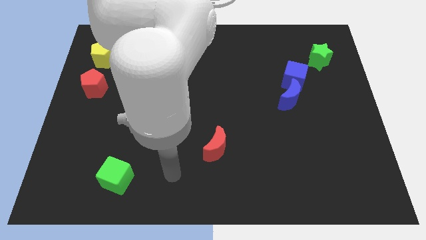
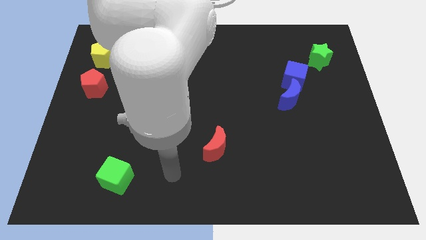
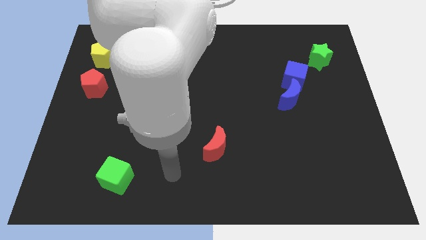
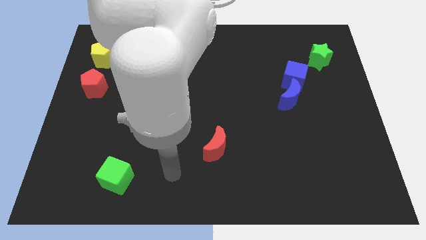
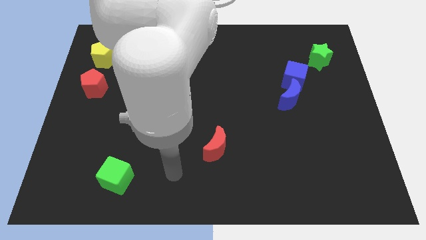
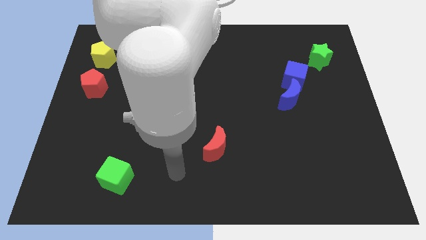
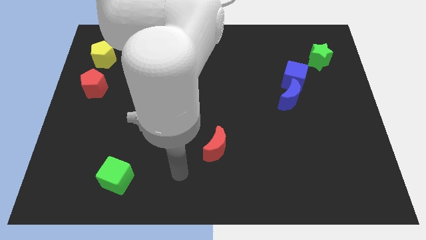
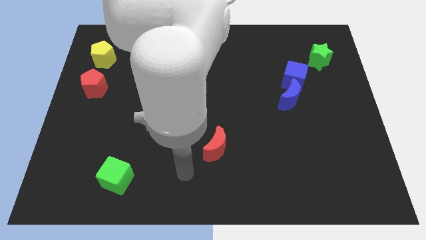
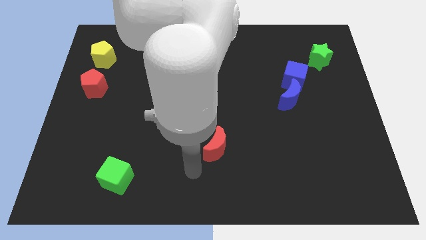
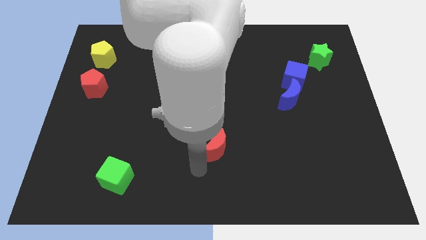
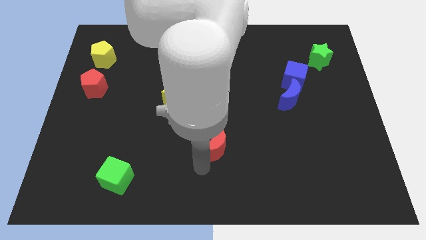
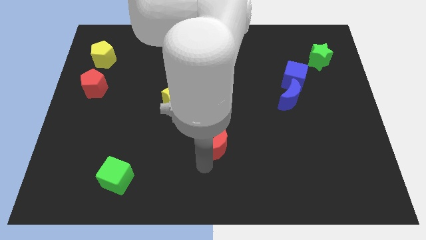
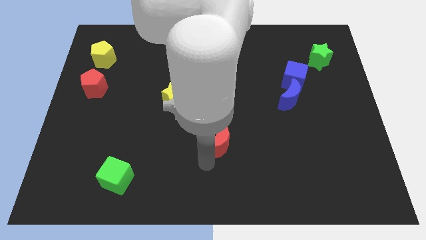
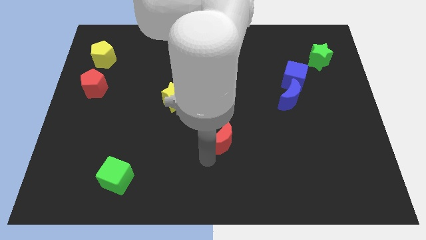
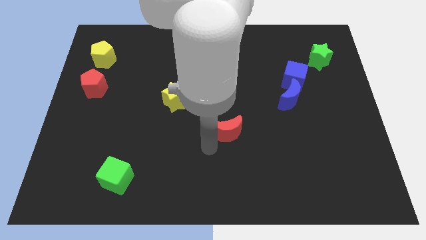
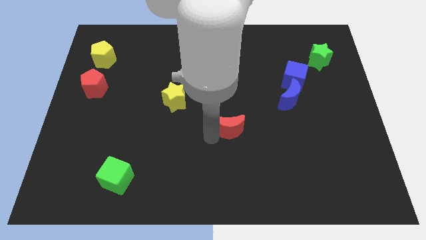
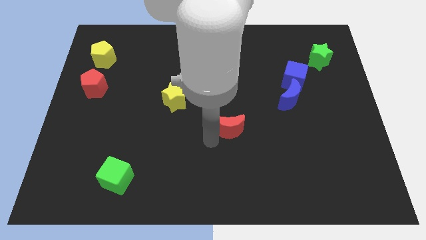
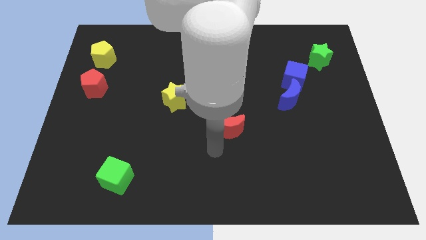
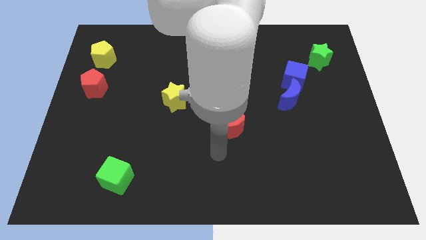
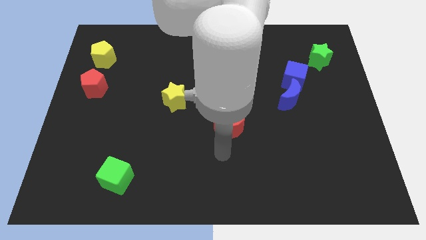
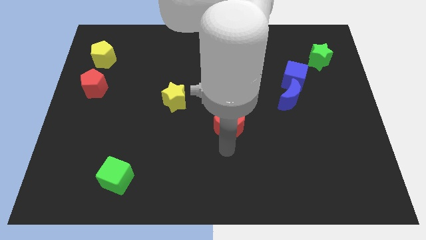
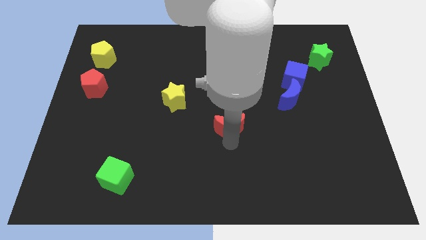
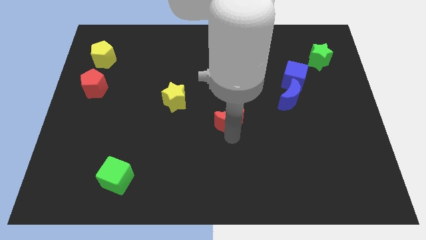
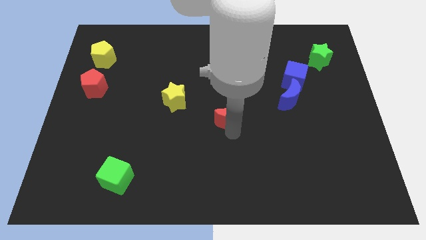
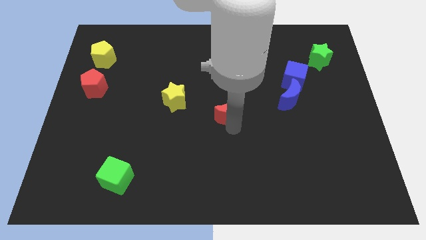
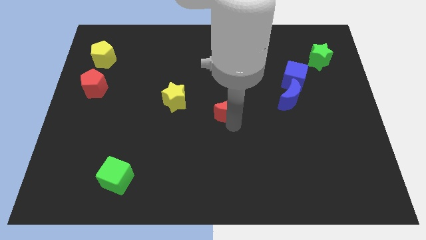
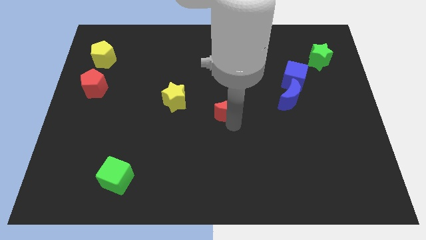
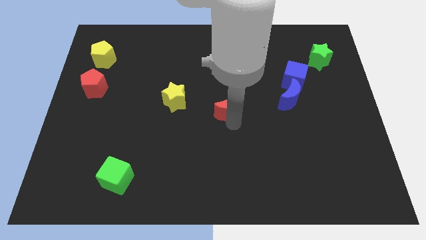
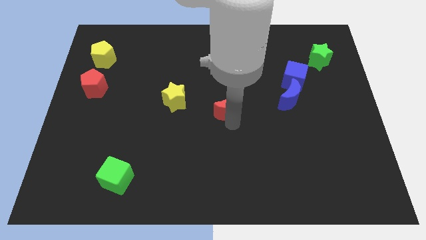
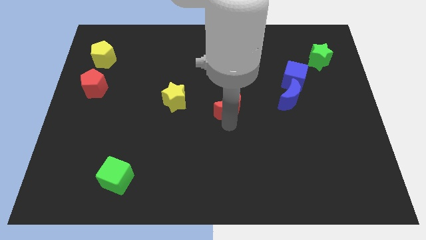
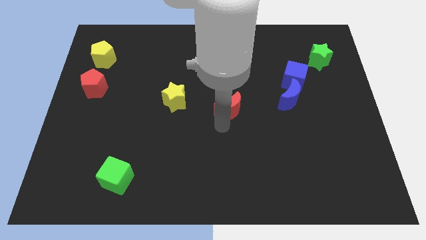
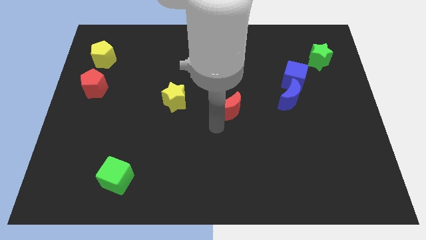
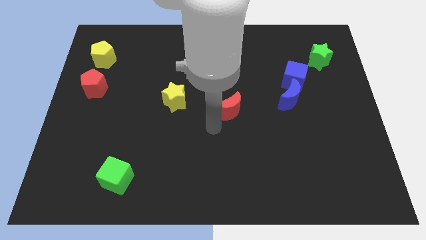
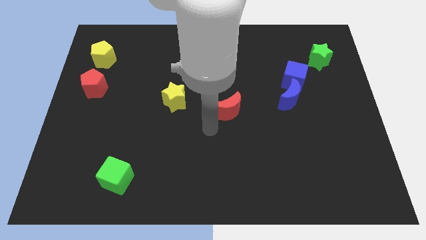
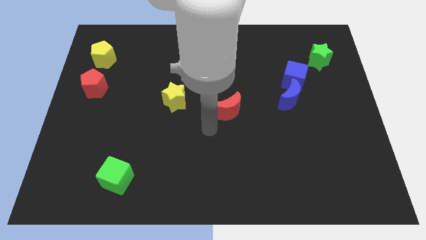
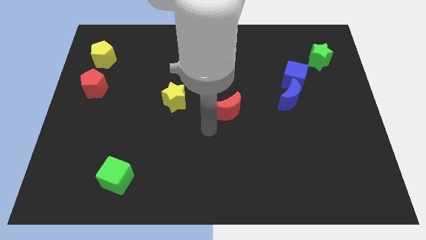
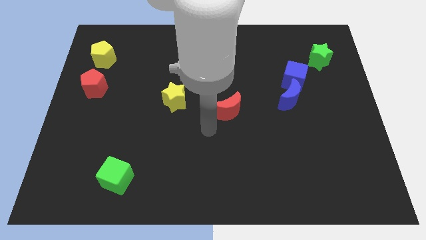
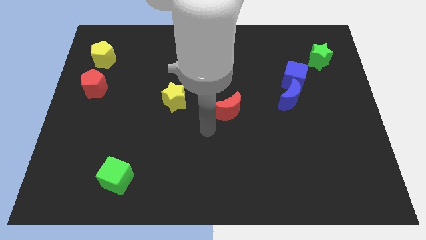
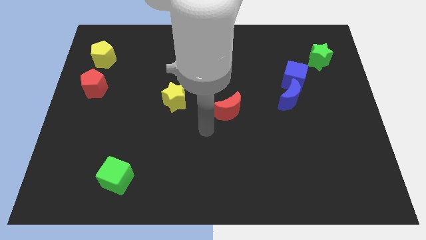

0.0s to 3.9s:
move the red crescent to the right of the yellow star

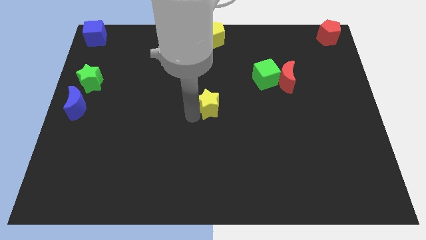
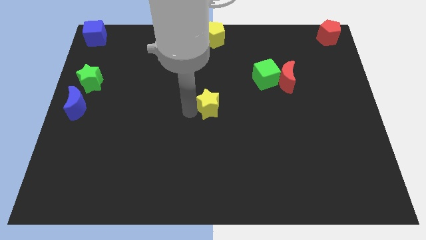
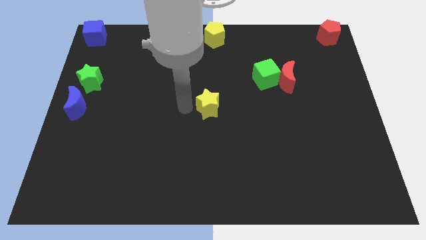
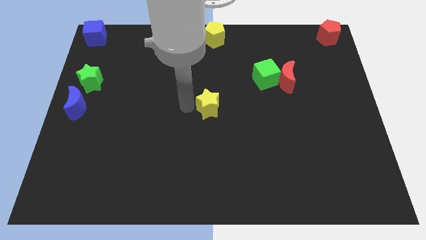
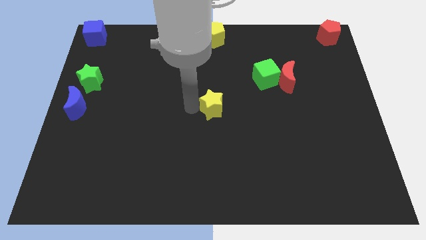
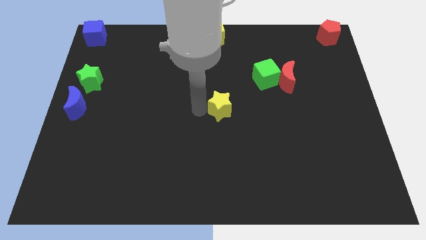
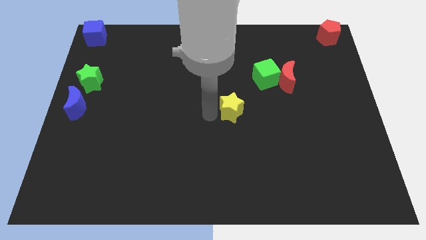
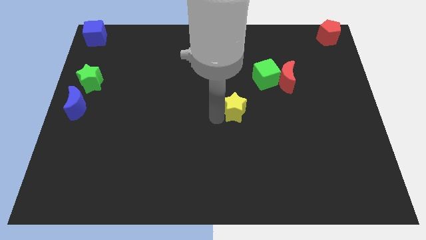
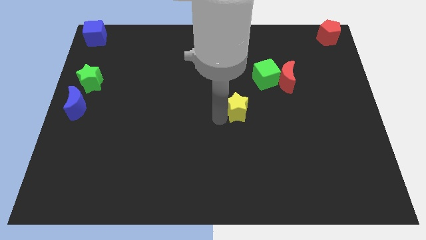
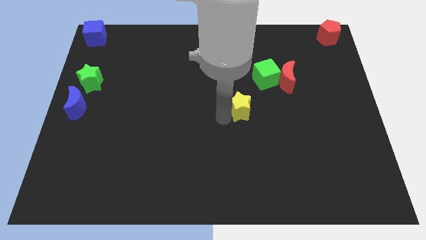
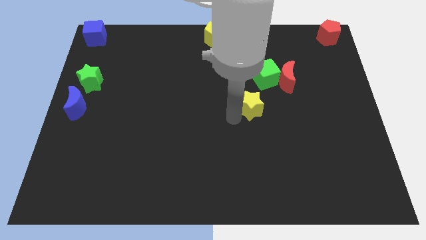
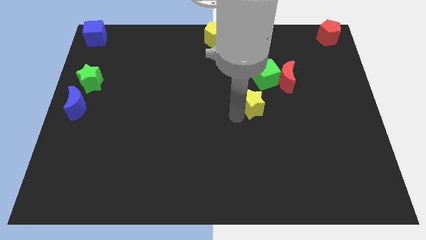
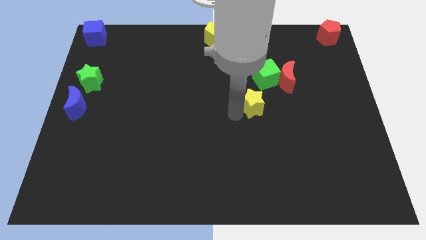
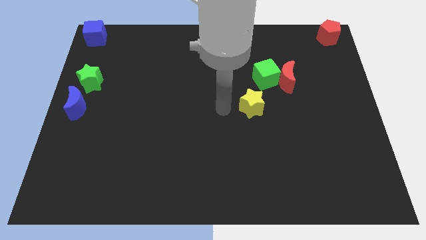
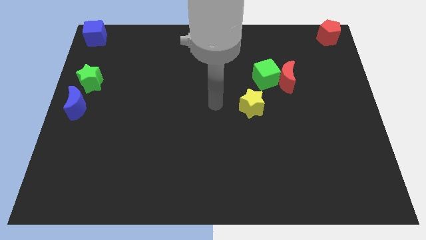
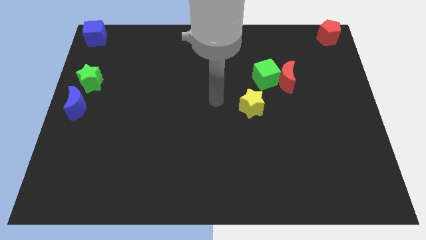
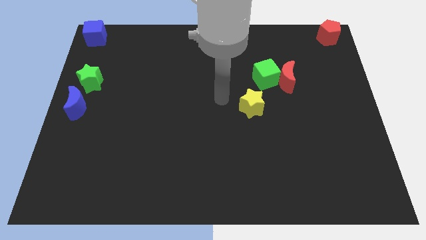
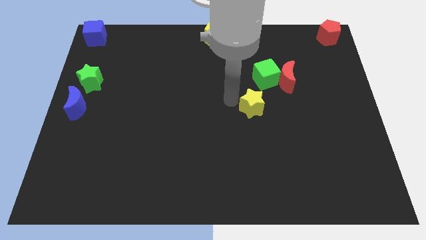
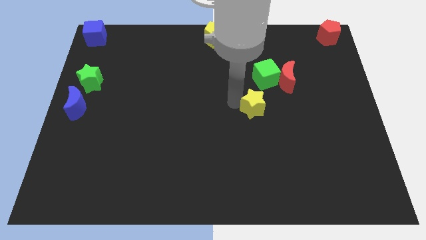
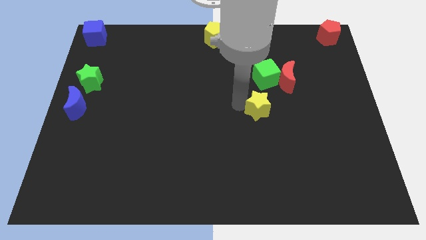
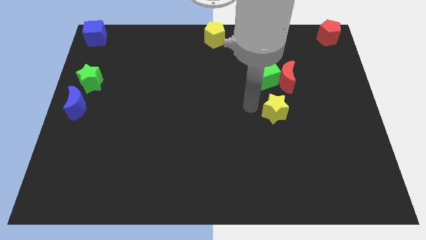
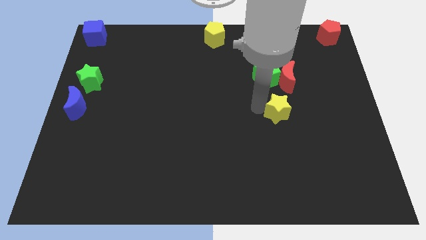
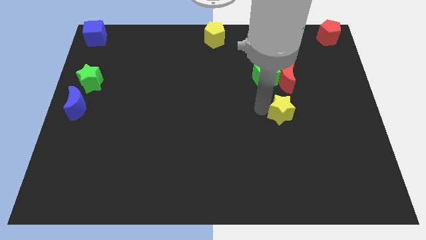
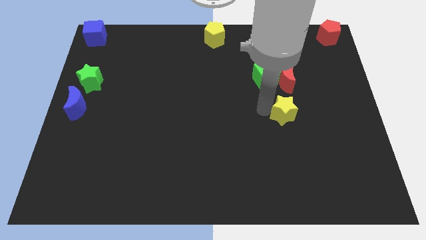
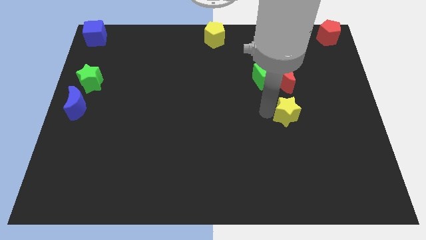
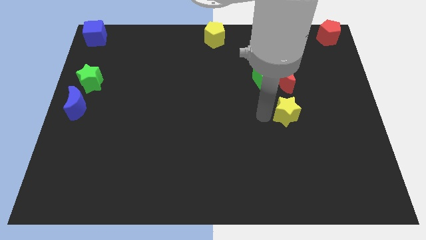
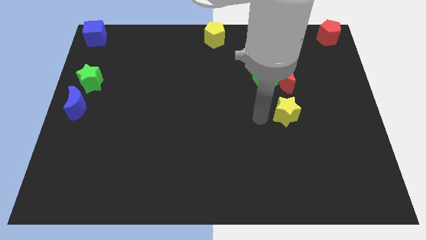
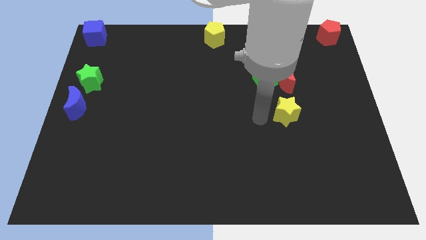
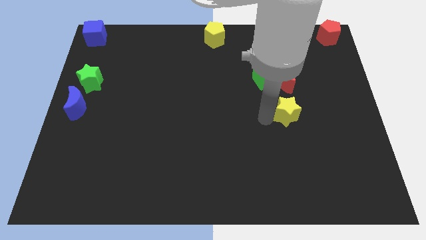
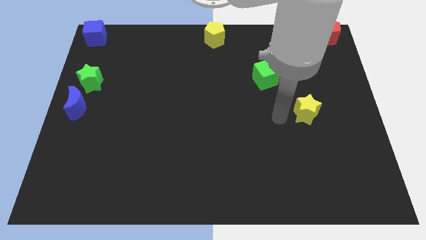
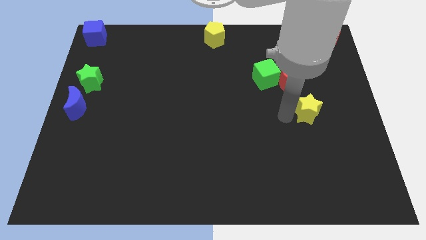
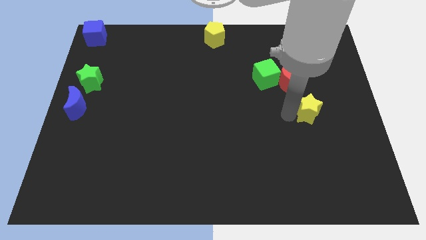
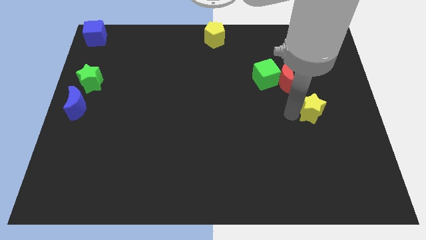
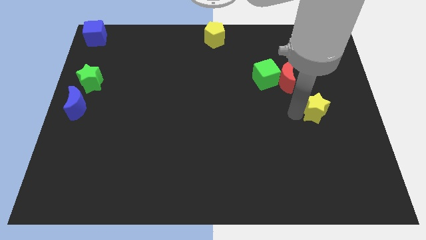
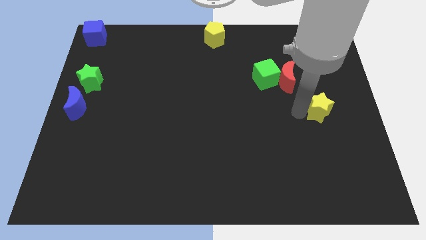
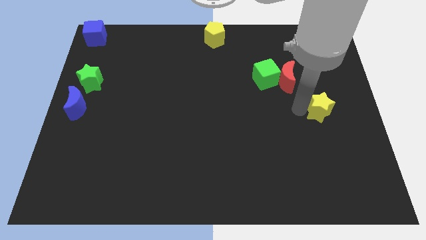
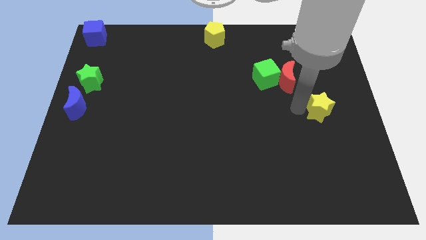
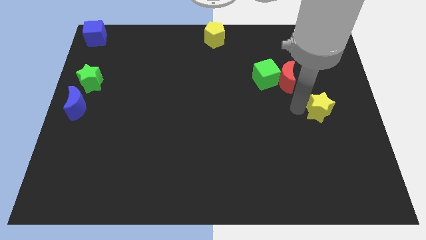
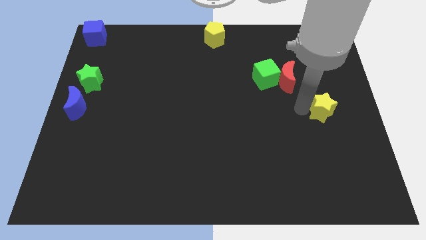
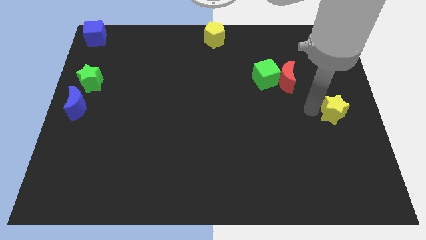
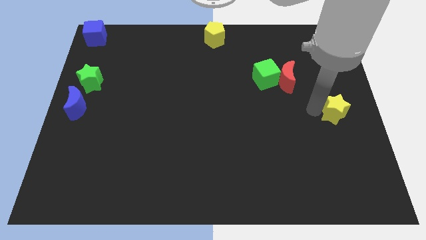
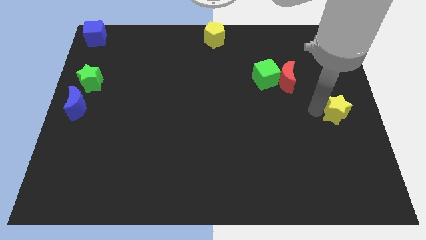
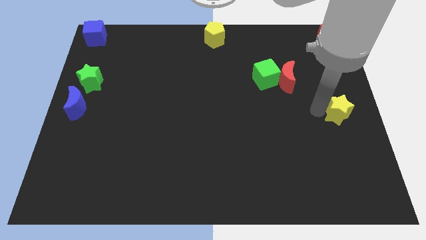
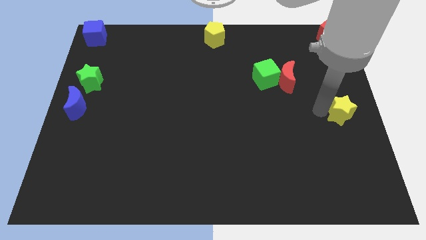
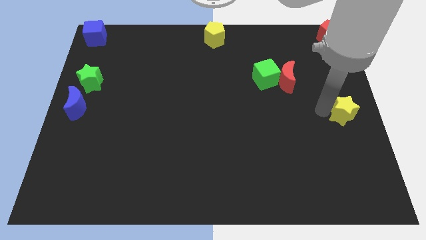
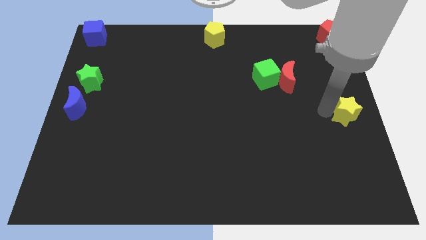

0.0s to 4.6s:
push the yellow star to the center right of the board

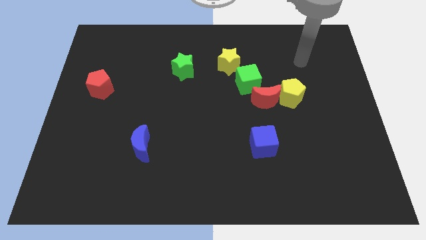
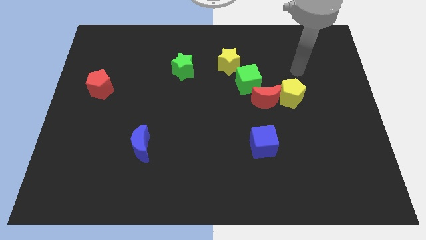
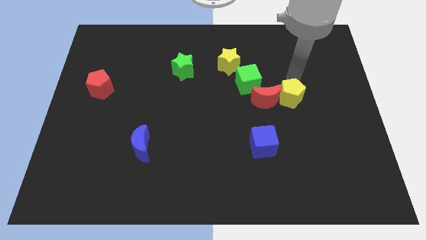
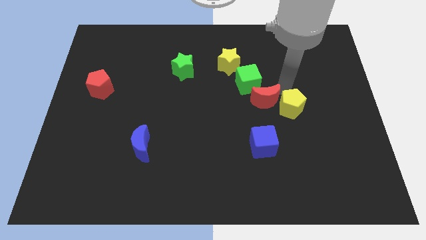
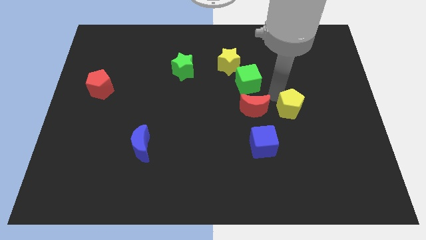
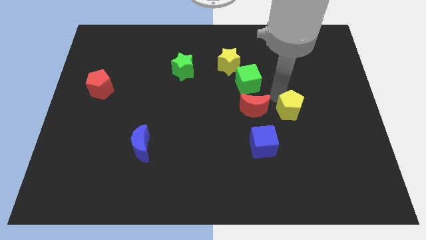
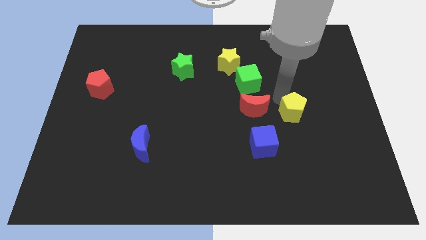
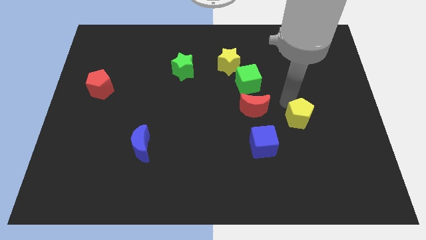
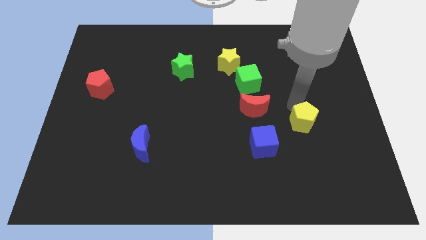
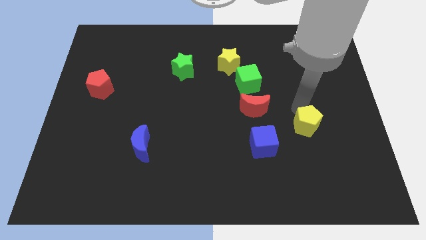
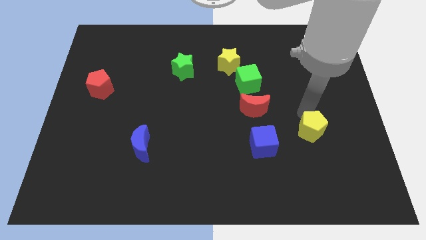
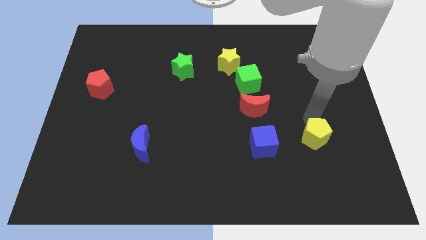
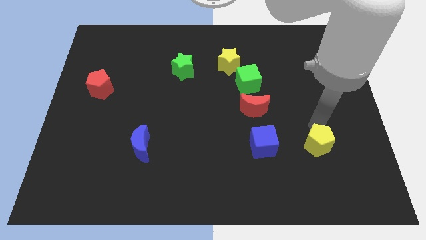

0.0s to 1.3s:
place the yellow pentagon to the right side of the blue cube
